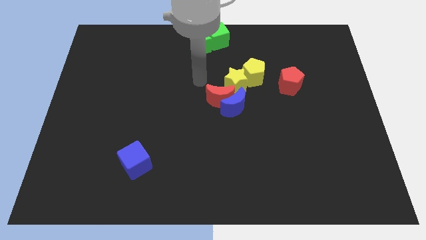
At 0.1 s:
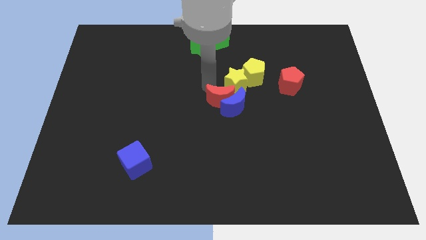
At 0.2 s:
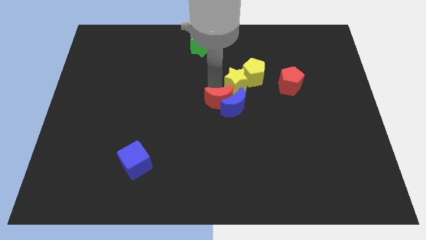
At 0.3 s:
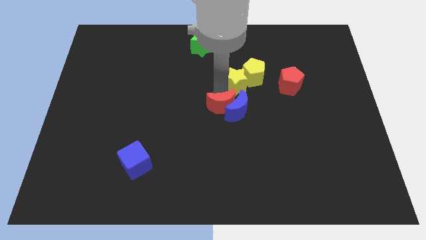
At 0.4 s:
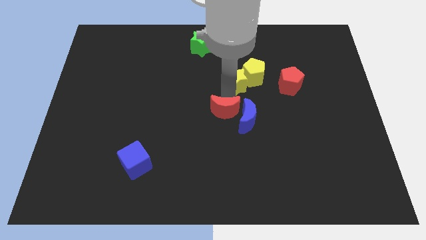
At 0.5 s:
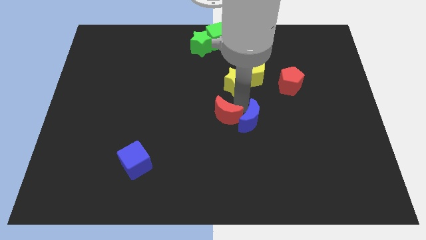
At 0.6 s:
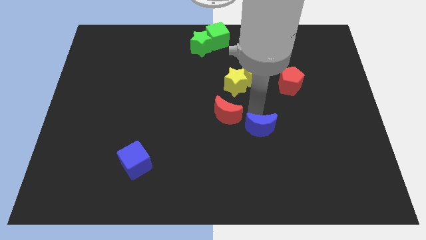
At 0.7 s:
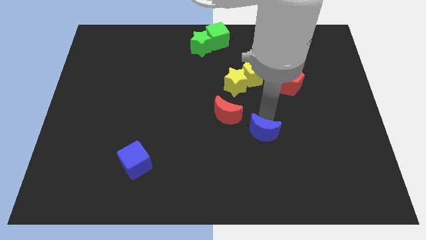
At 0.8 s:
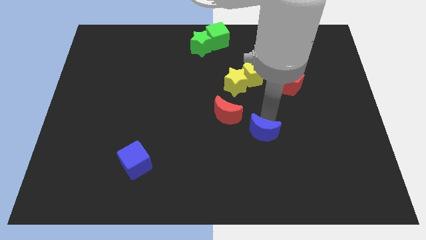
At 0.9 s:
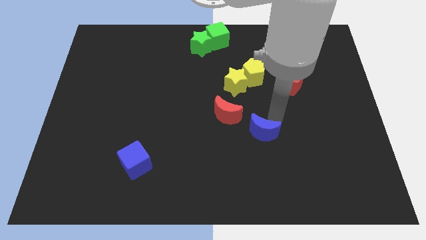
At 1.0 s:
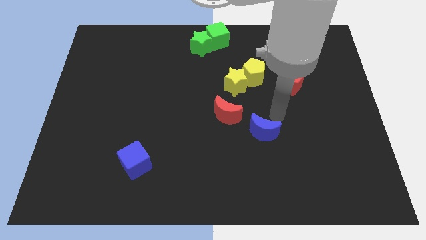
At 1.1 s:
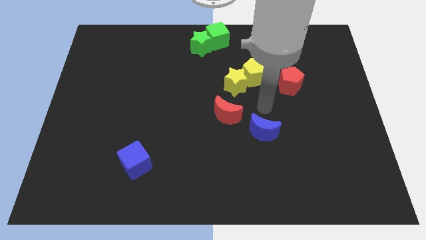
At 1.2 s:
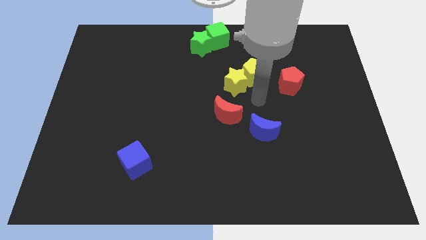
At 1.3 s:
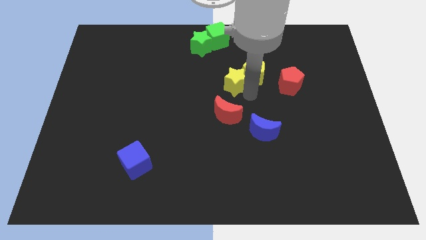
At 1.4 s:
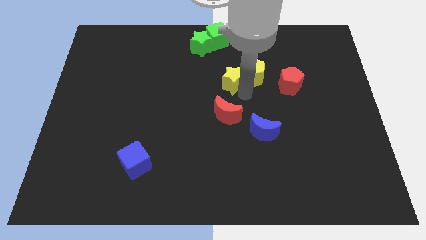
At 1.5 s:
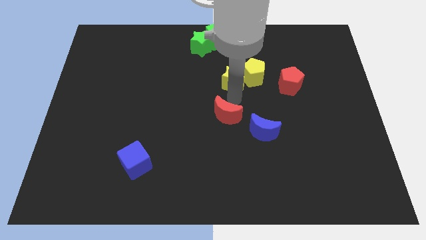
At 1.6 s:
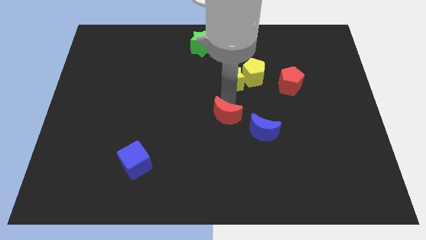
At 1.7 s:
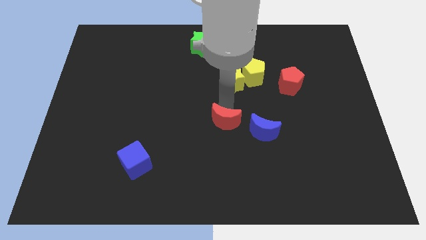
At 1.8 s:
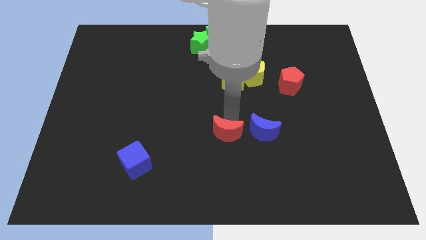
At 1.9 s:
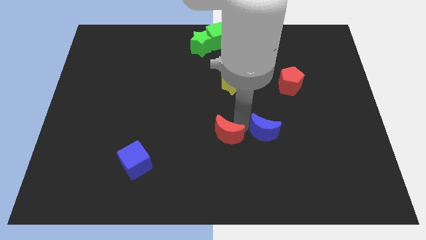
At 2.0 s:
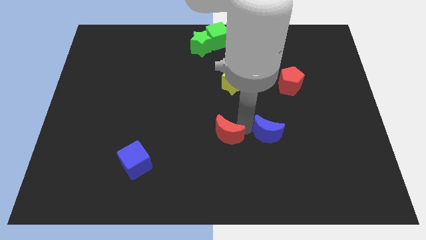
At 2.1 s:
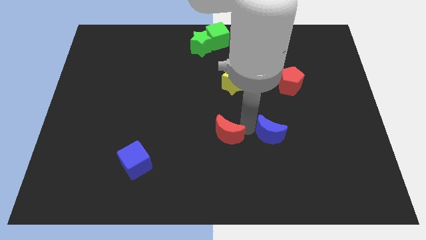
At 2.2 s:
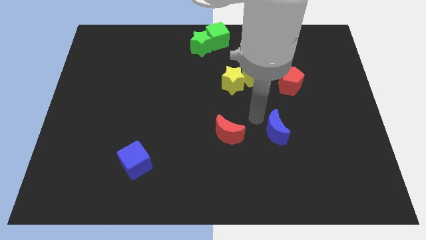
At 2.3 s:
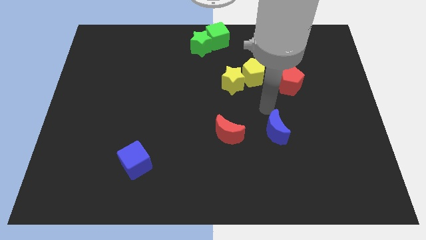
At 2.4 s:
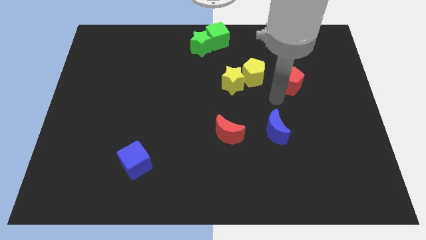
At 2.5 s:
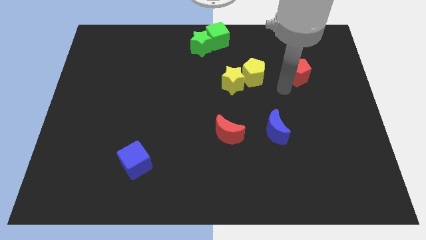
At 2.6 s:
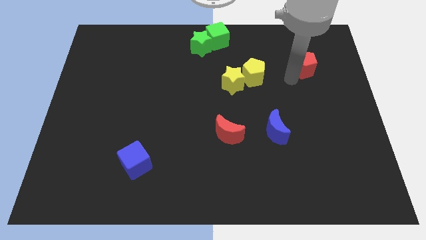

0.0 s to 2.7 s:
separate the red and blue crescents

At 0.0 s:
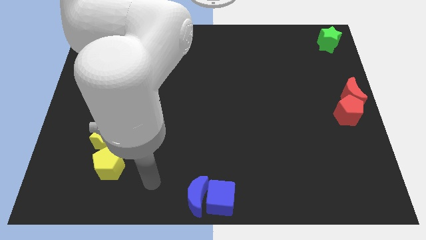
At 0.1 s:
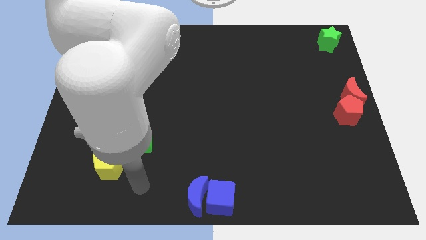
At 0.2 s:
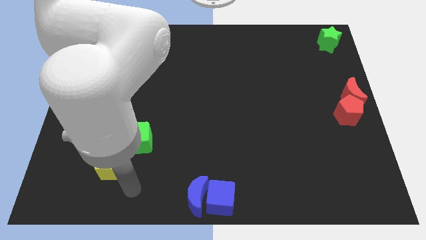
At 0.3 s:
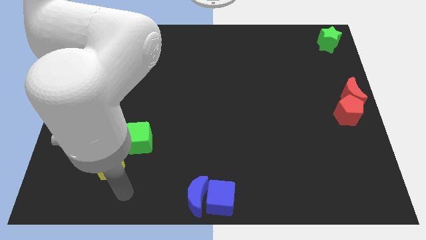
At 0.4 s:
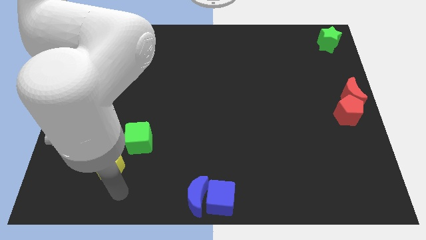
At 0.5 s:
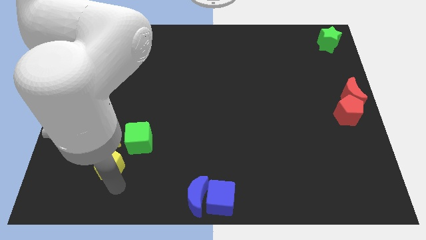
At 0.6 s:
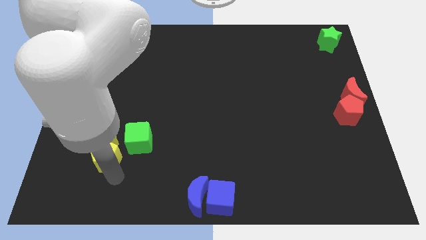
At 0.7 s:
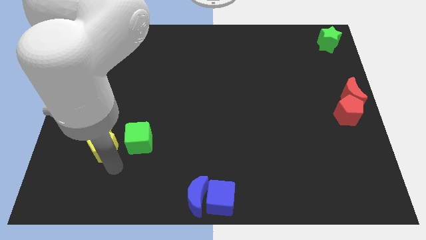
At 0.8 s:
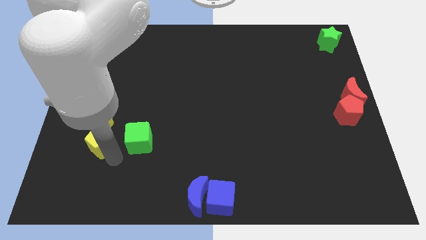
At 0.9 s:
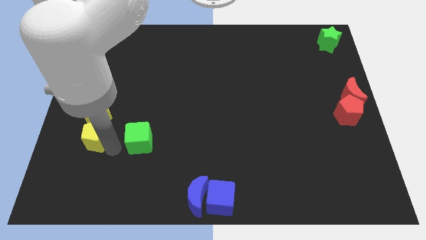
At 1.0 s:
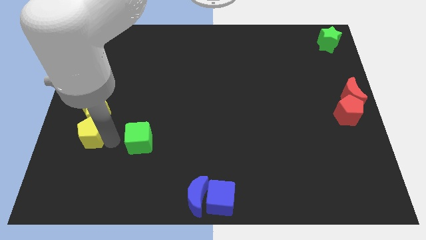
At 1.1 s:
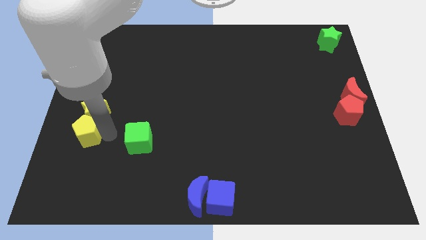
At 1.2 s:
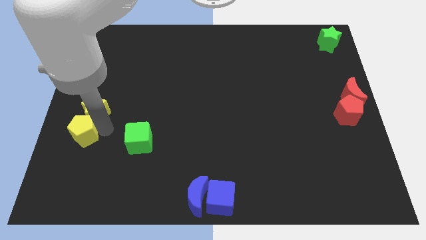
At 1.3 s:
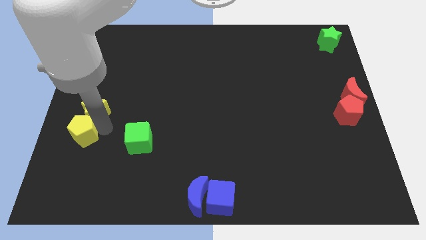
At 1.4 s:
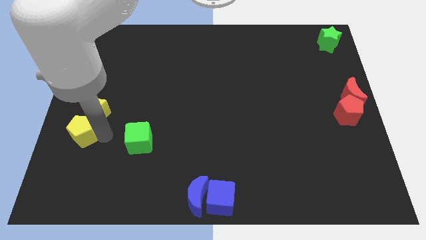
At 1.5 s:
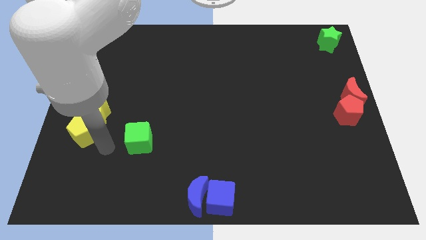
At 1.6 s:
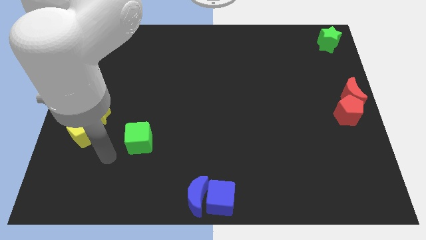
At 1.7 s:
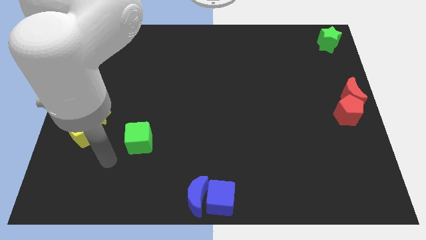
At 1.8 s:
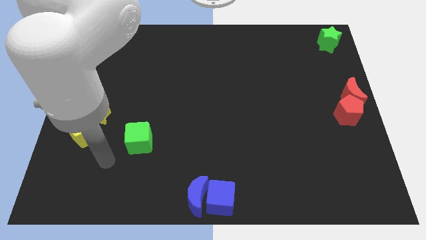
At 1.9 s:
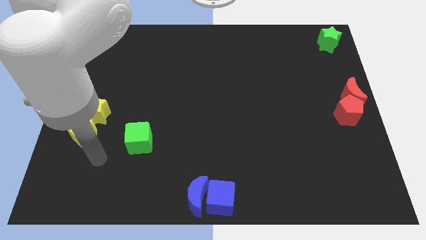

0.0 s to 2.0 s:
push the yellow pentagon into the yellow star

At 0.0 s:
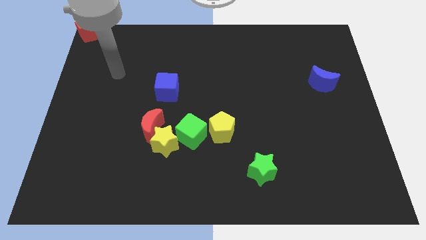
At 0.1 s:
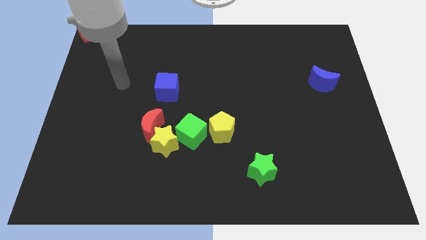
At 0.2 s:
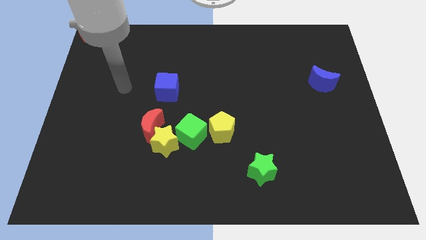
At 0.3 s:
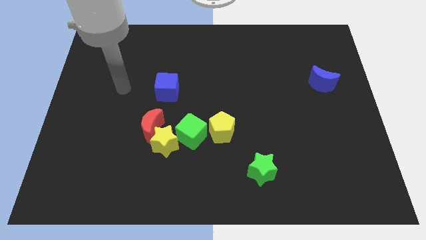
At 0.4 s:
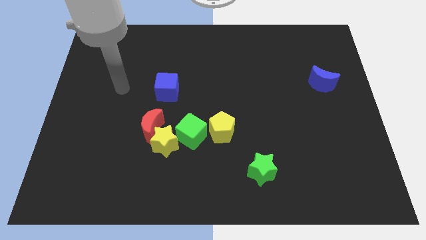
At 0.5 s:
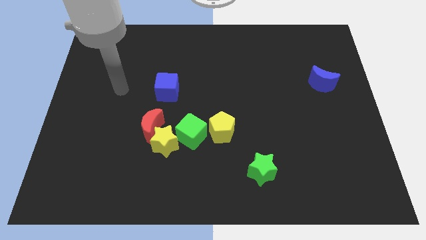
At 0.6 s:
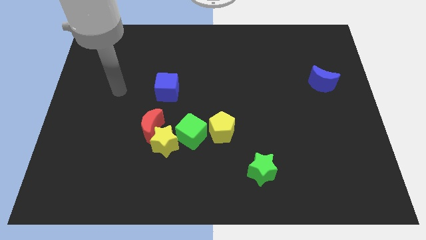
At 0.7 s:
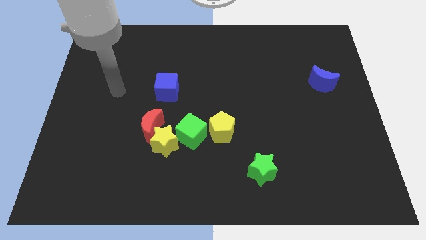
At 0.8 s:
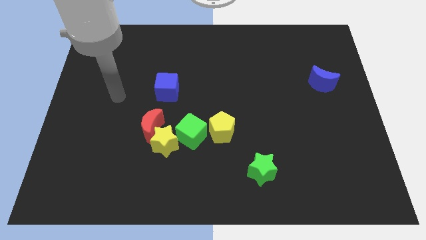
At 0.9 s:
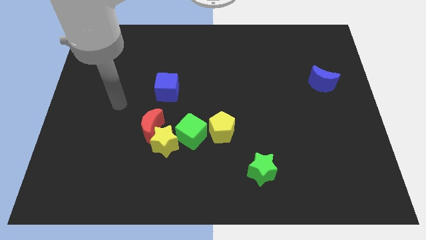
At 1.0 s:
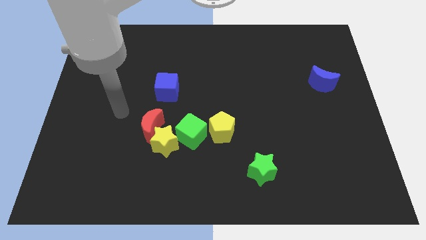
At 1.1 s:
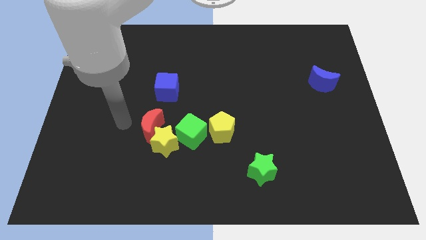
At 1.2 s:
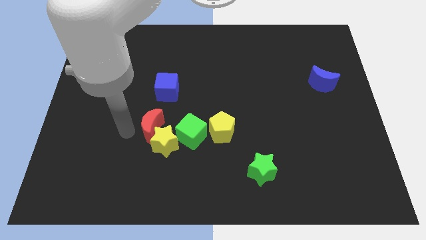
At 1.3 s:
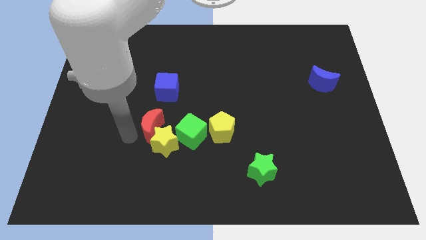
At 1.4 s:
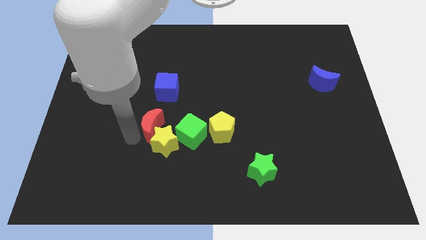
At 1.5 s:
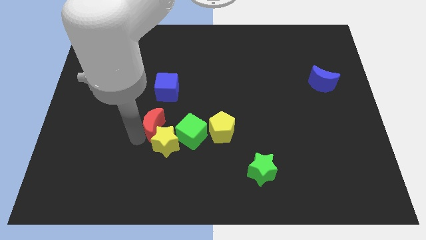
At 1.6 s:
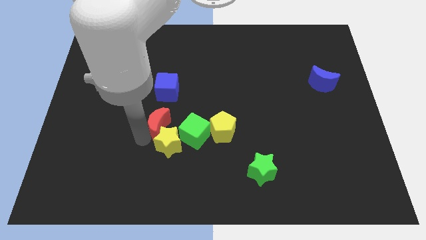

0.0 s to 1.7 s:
move your arm to the left of red crescent

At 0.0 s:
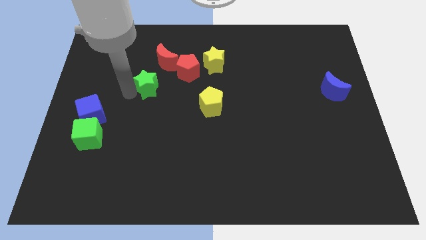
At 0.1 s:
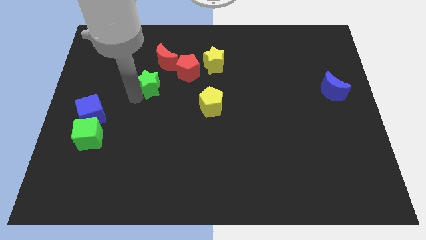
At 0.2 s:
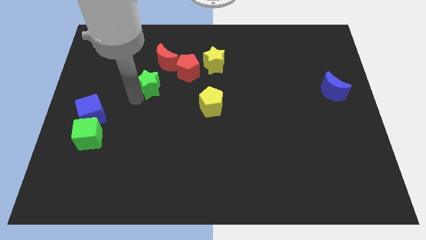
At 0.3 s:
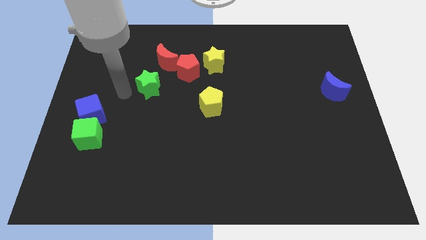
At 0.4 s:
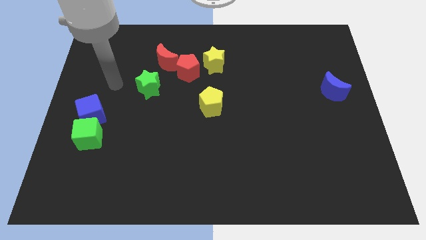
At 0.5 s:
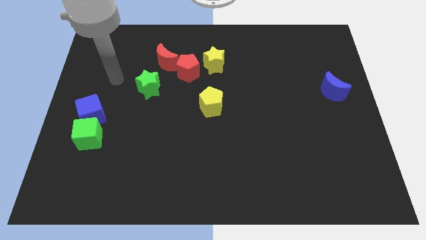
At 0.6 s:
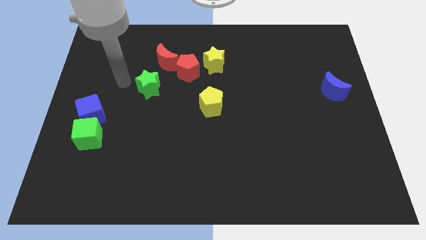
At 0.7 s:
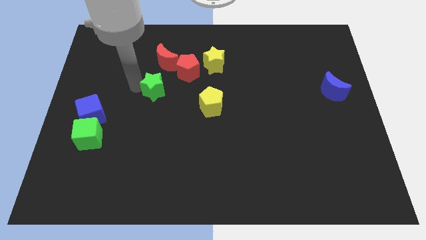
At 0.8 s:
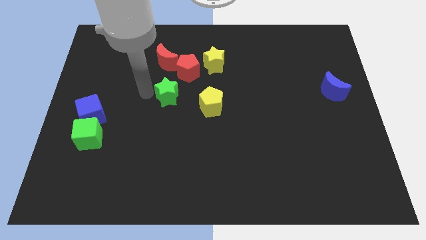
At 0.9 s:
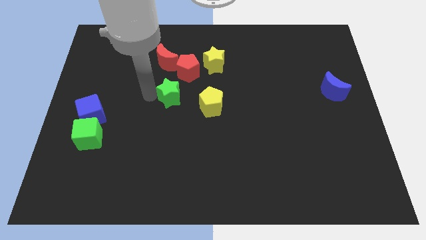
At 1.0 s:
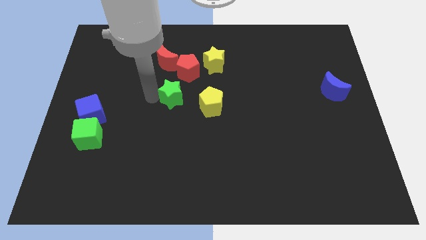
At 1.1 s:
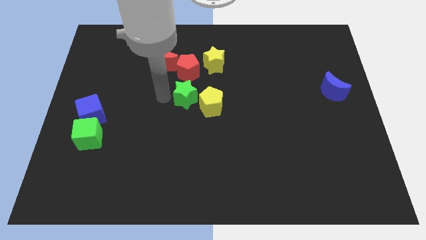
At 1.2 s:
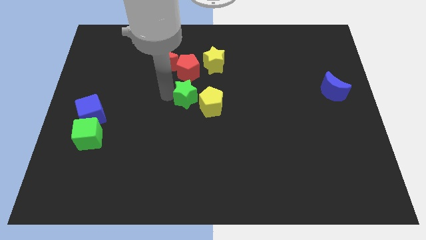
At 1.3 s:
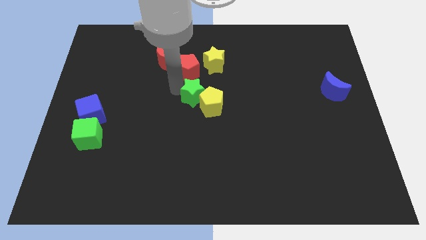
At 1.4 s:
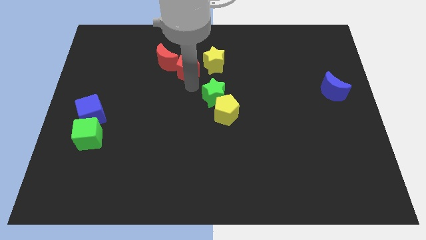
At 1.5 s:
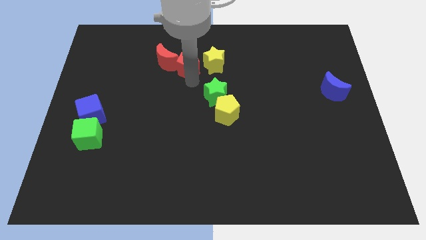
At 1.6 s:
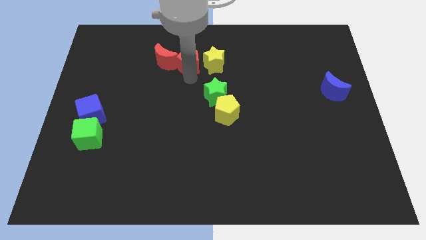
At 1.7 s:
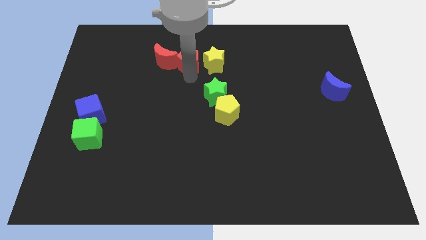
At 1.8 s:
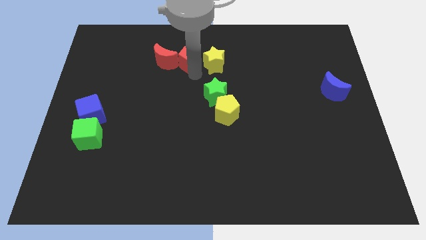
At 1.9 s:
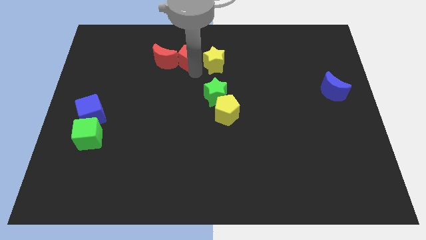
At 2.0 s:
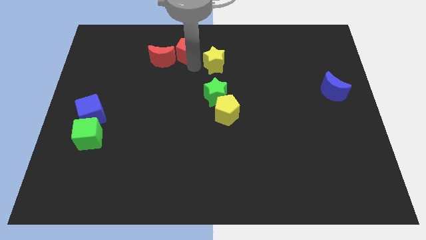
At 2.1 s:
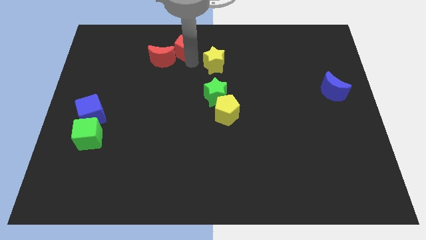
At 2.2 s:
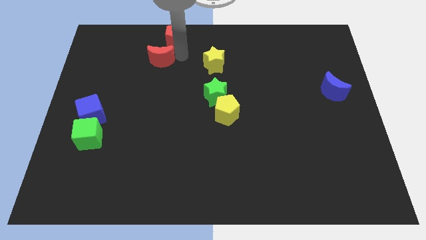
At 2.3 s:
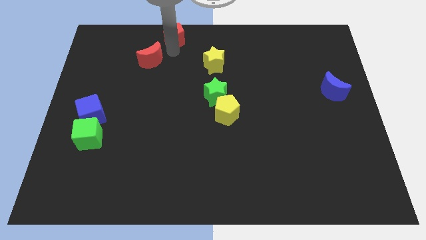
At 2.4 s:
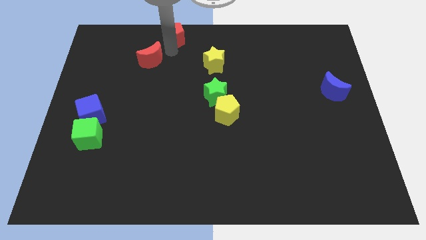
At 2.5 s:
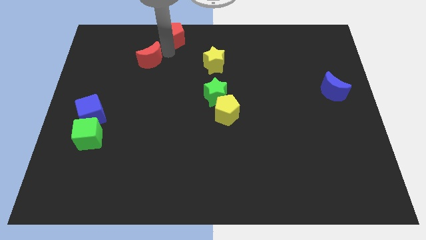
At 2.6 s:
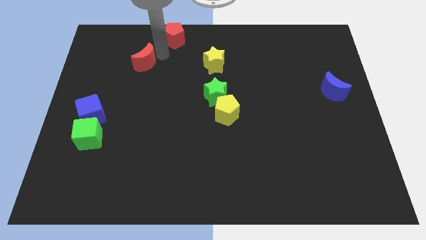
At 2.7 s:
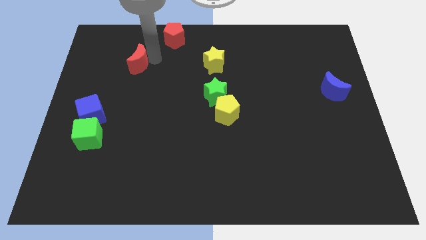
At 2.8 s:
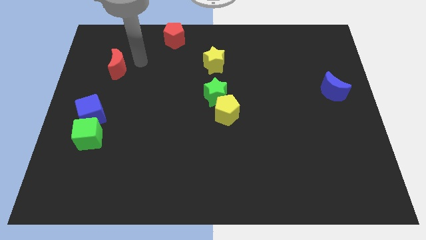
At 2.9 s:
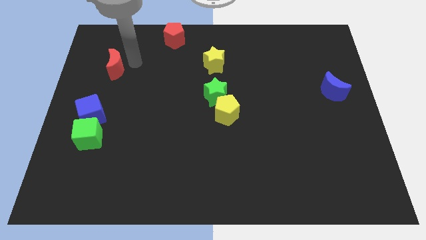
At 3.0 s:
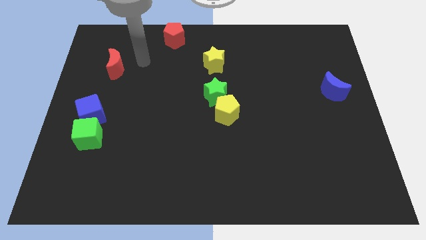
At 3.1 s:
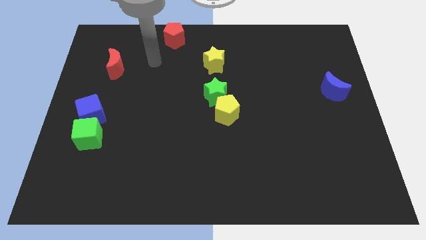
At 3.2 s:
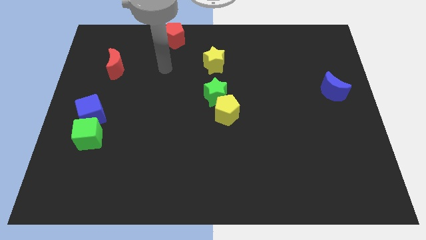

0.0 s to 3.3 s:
separate red moon from the red pentagon
